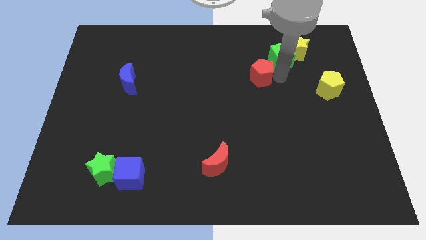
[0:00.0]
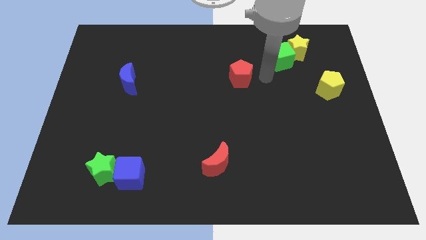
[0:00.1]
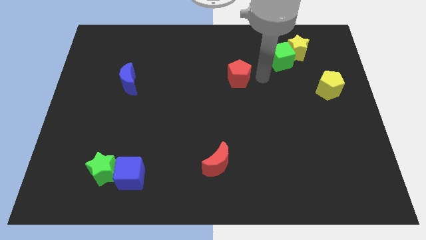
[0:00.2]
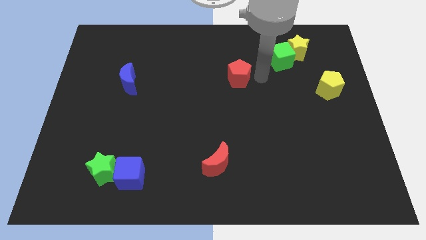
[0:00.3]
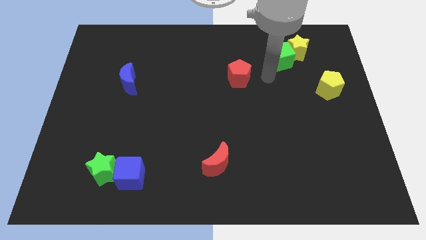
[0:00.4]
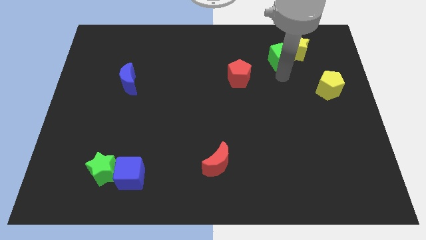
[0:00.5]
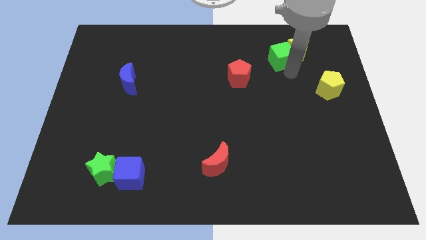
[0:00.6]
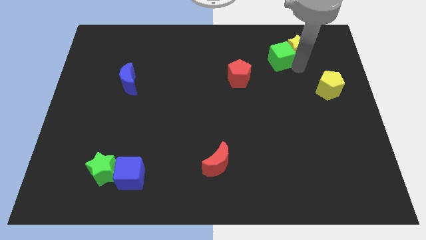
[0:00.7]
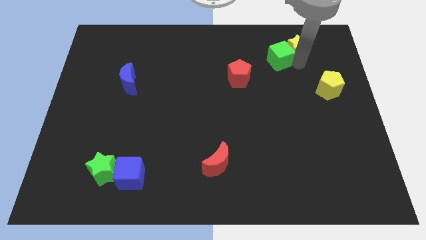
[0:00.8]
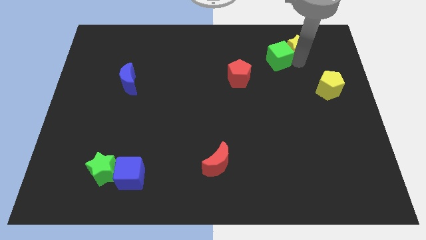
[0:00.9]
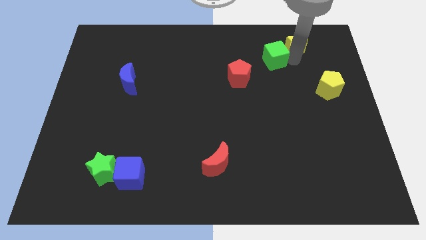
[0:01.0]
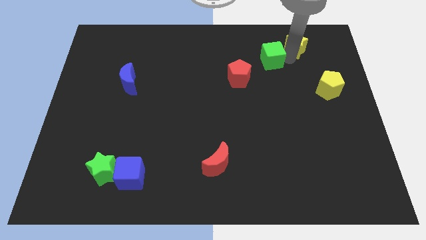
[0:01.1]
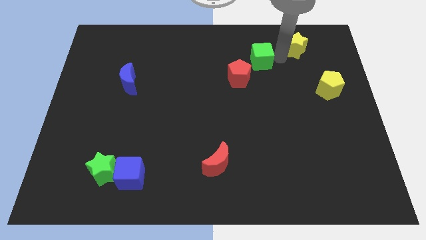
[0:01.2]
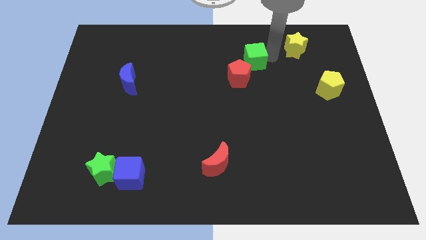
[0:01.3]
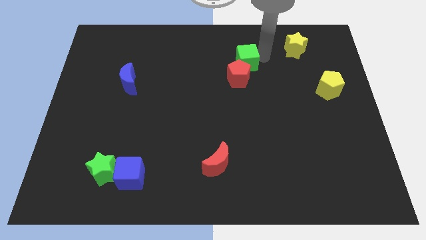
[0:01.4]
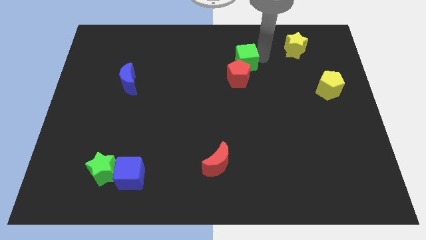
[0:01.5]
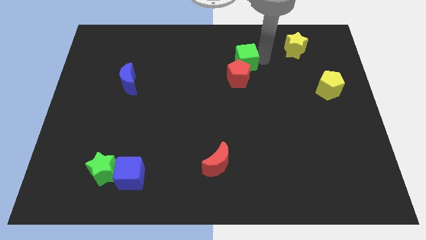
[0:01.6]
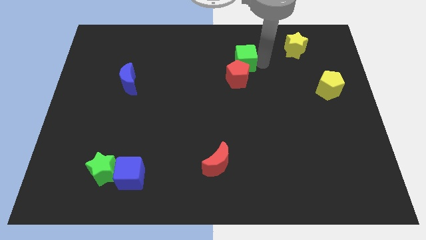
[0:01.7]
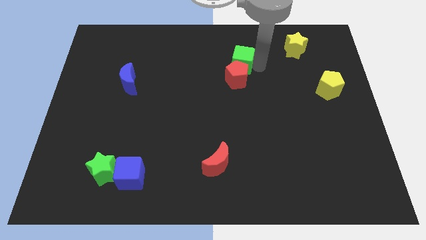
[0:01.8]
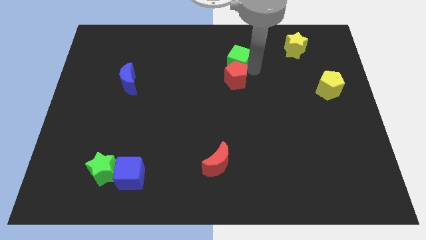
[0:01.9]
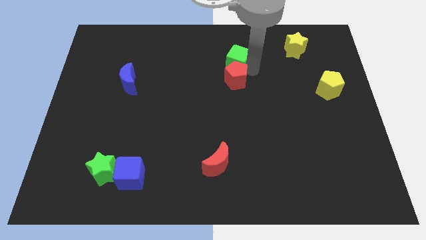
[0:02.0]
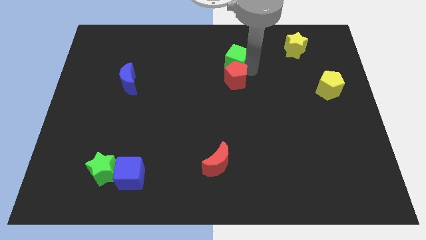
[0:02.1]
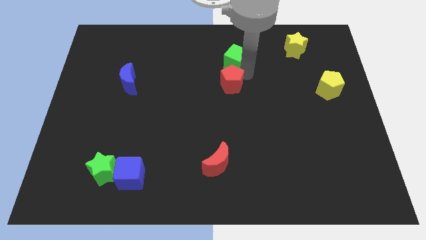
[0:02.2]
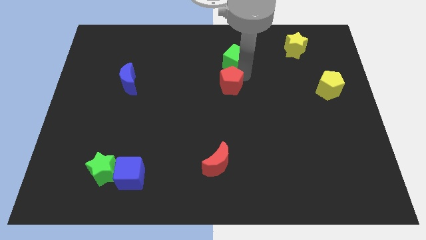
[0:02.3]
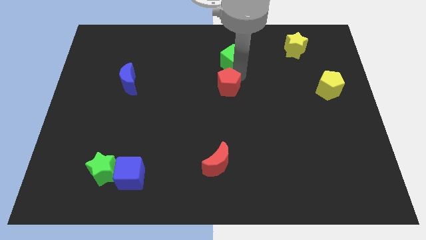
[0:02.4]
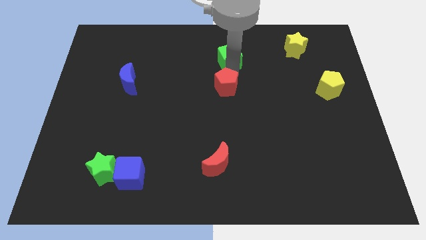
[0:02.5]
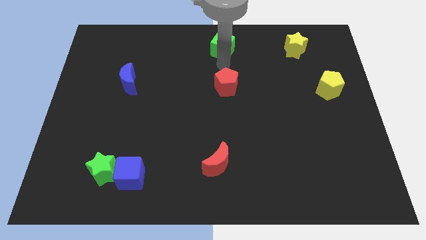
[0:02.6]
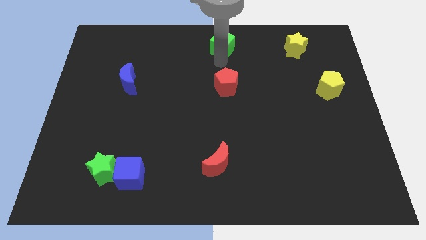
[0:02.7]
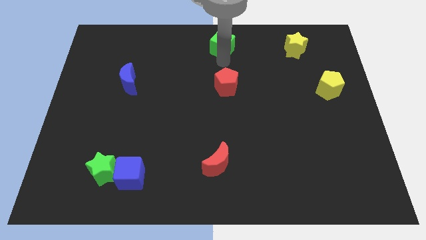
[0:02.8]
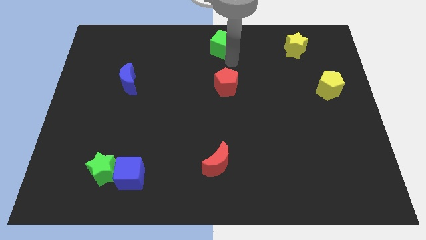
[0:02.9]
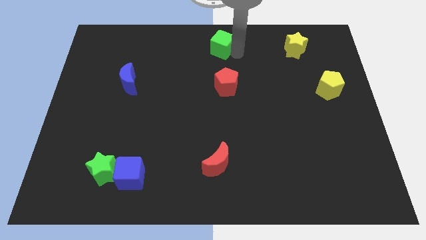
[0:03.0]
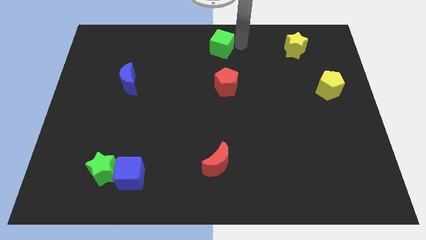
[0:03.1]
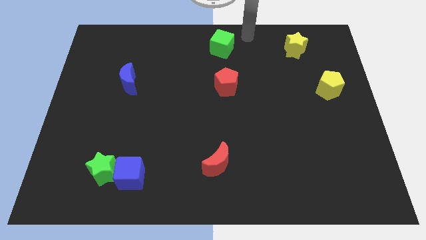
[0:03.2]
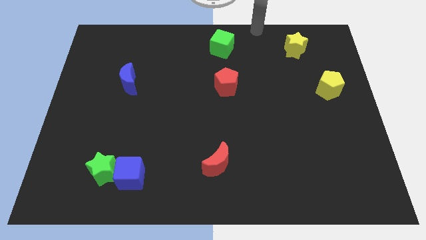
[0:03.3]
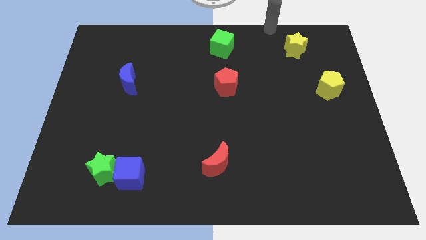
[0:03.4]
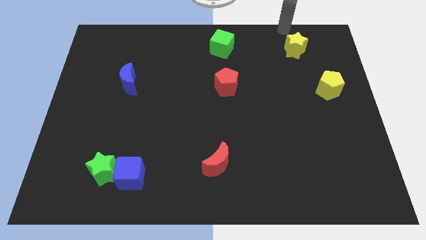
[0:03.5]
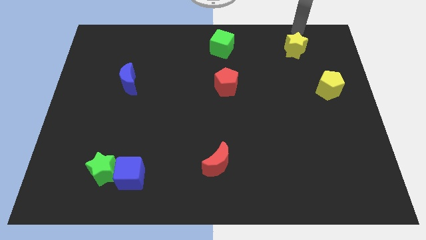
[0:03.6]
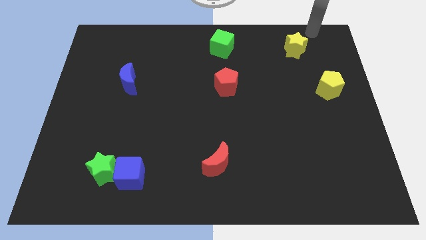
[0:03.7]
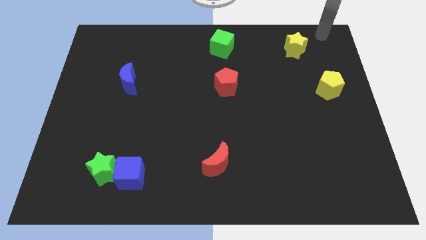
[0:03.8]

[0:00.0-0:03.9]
place red pentagon and green cube in a vertical line

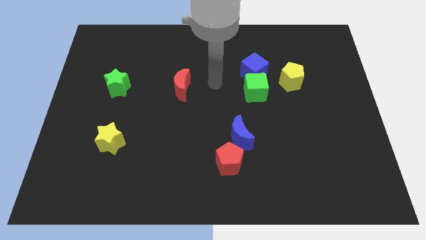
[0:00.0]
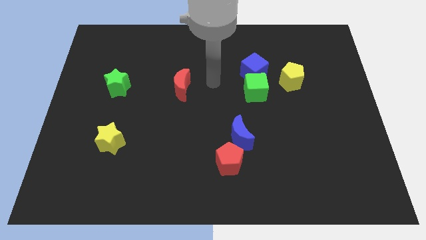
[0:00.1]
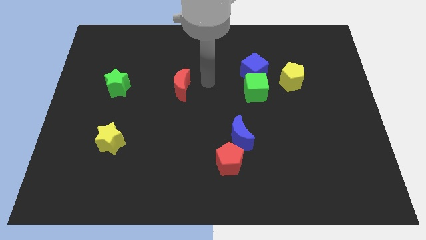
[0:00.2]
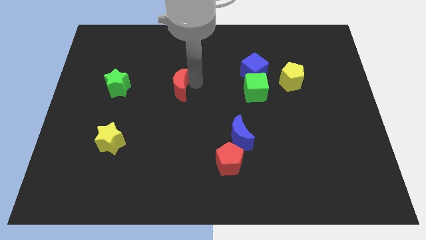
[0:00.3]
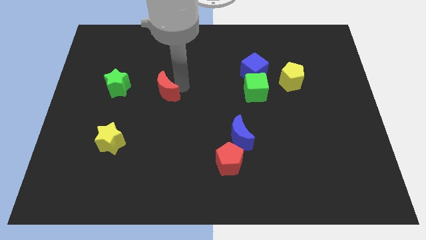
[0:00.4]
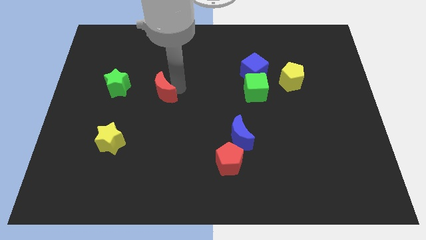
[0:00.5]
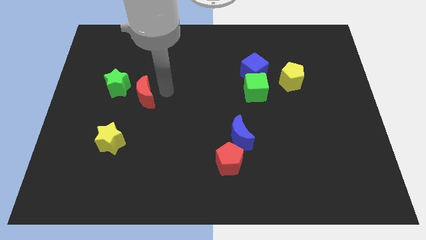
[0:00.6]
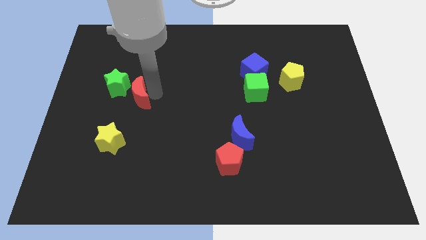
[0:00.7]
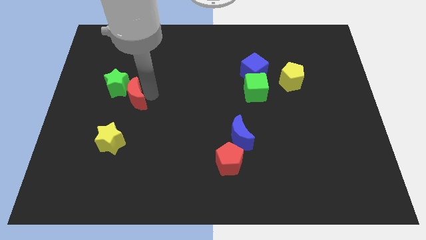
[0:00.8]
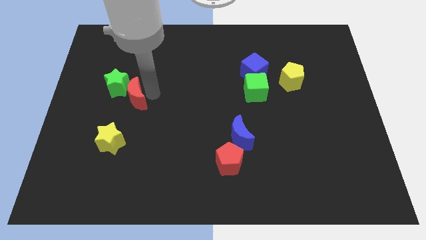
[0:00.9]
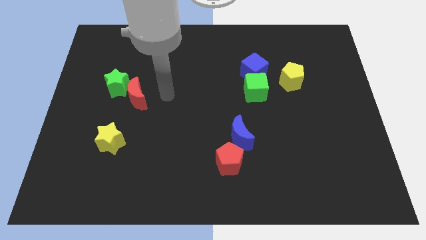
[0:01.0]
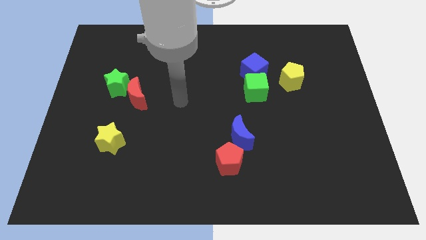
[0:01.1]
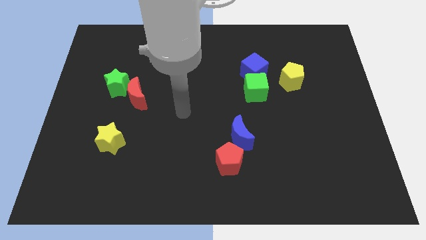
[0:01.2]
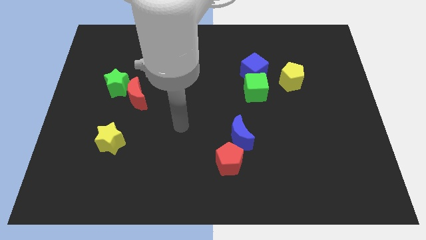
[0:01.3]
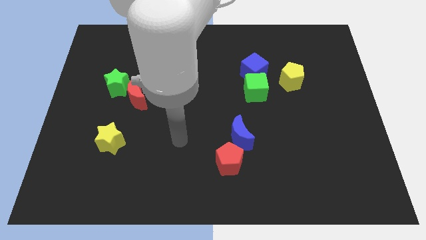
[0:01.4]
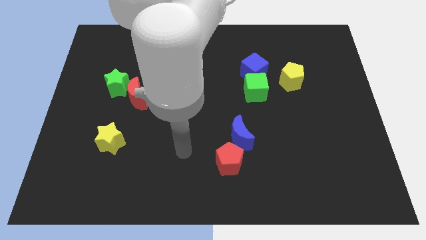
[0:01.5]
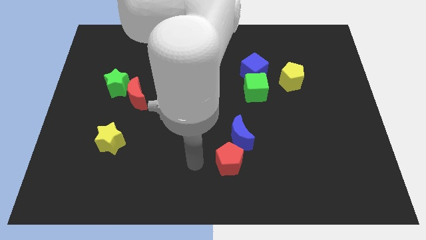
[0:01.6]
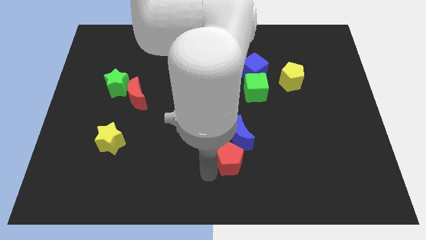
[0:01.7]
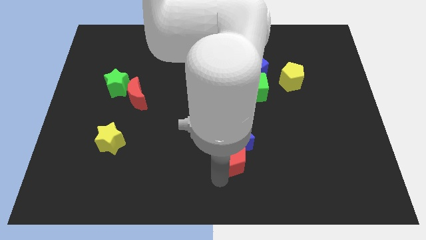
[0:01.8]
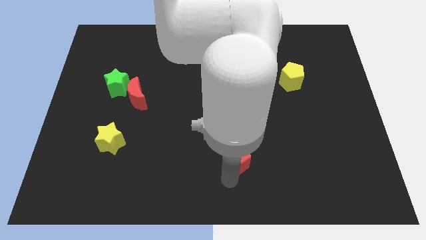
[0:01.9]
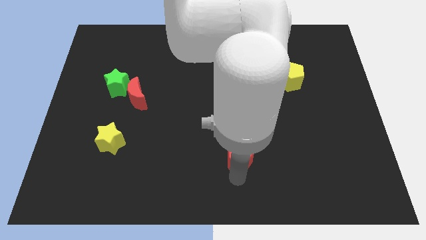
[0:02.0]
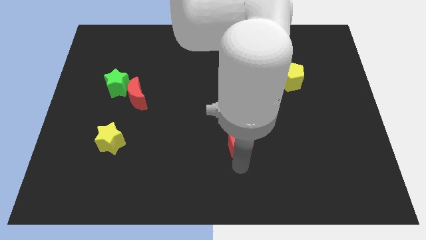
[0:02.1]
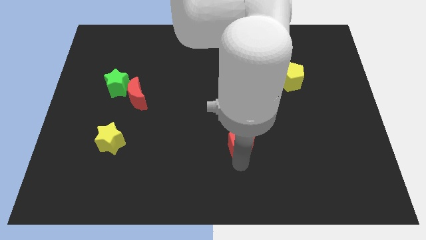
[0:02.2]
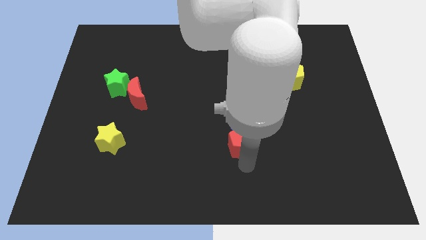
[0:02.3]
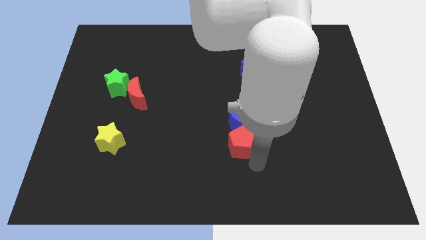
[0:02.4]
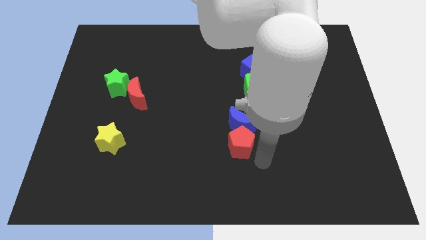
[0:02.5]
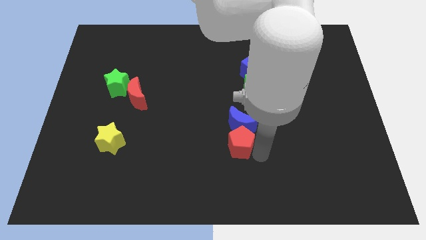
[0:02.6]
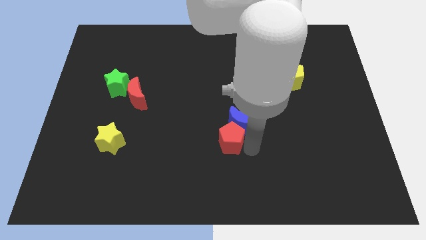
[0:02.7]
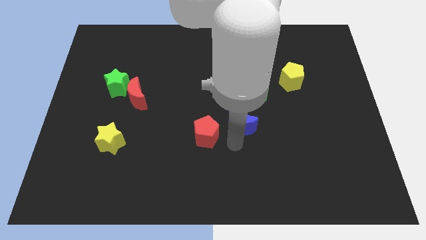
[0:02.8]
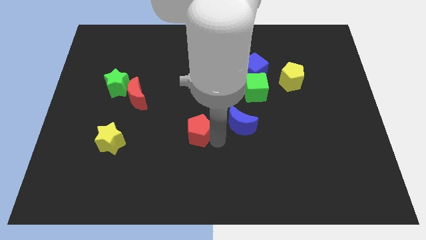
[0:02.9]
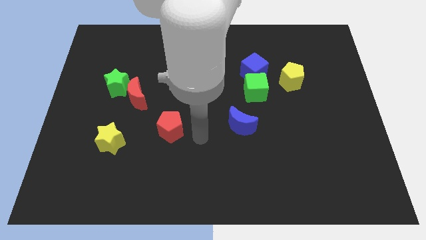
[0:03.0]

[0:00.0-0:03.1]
push the red pentagon parallel left to the blue crescent

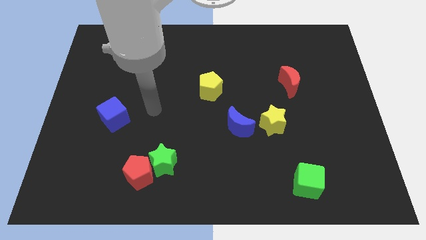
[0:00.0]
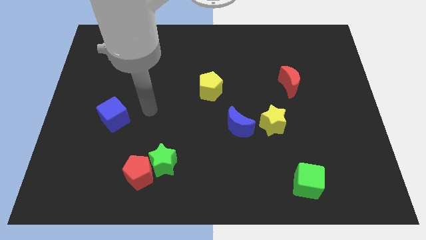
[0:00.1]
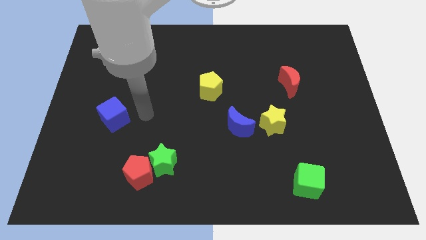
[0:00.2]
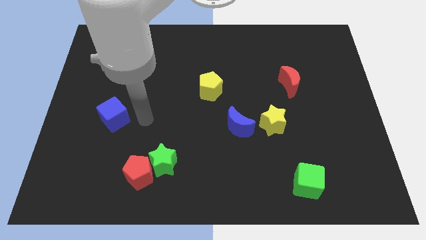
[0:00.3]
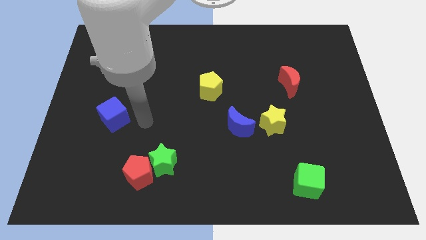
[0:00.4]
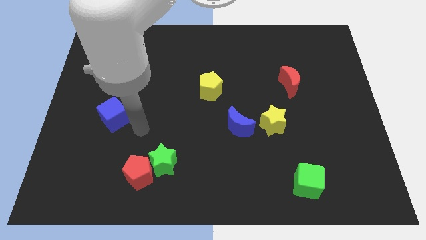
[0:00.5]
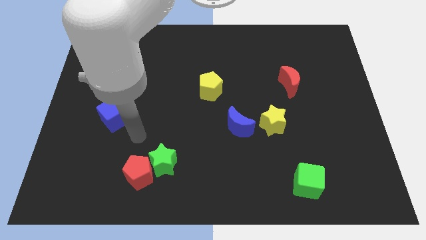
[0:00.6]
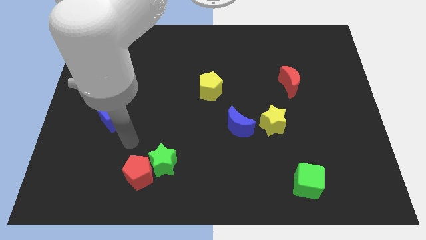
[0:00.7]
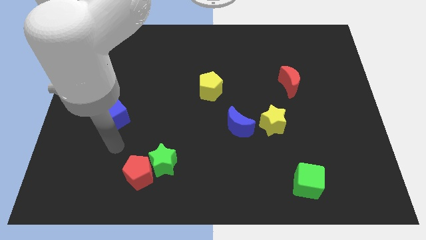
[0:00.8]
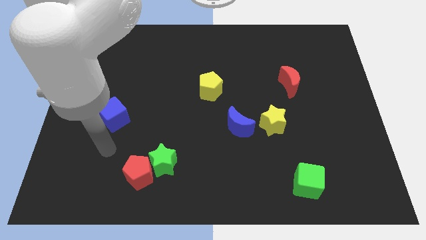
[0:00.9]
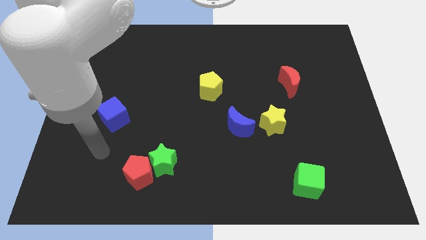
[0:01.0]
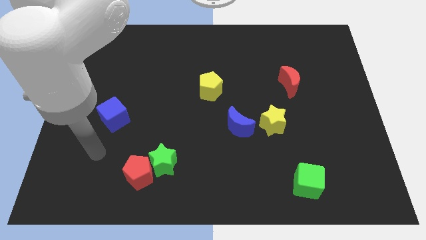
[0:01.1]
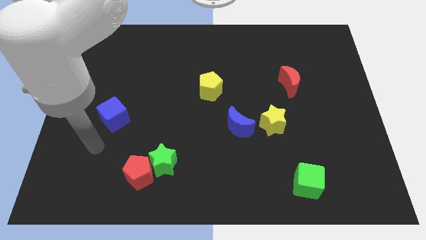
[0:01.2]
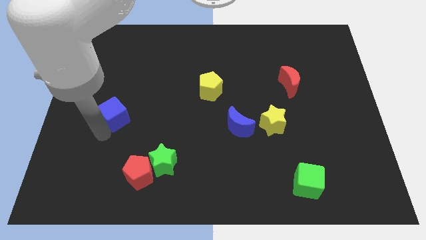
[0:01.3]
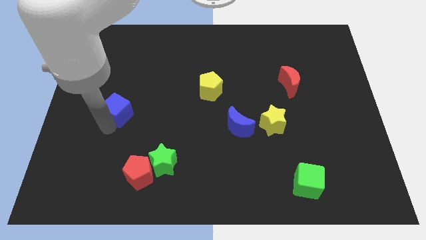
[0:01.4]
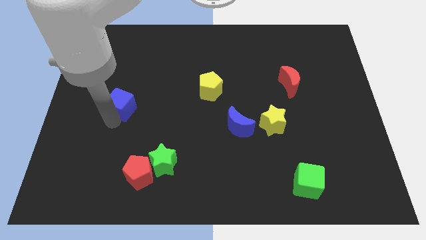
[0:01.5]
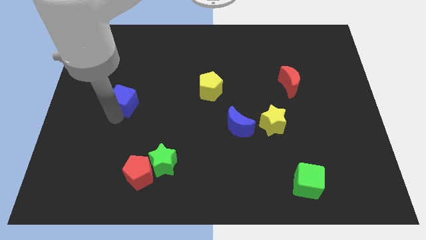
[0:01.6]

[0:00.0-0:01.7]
place the arm below the blue cube

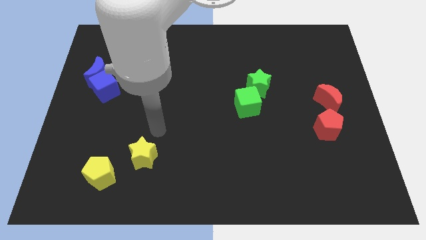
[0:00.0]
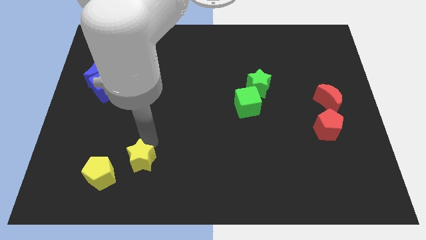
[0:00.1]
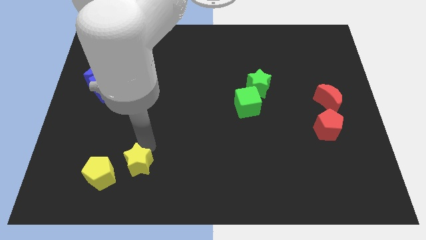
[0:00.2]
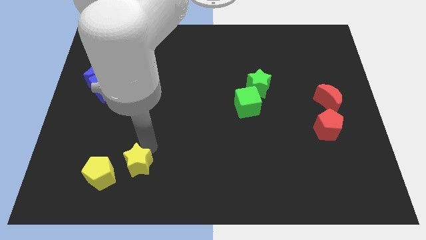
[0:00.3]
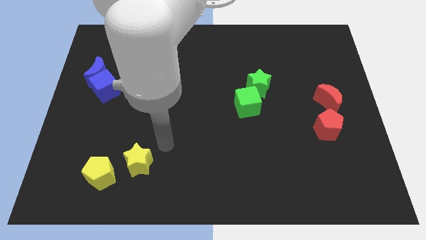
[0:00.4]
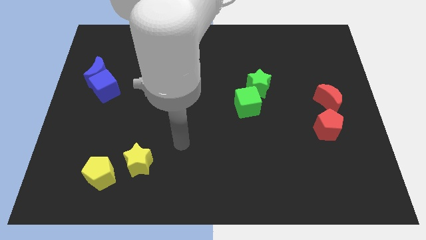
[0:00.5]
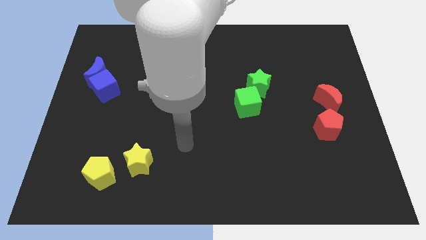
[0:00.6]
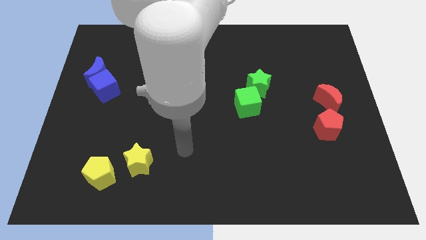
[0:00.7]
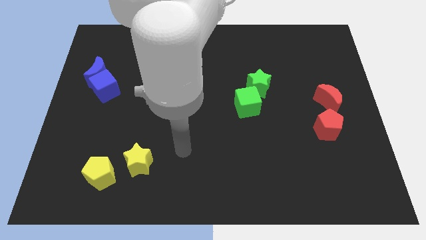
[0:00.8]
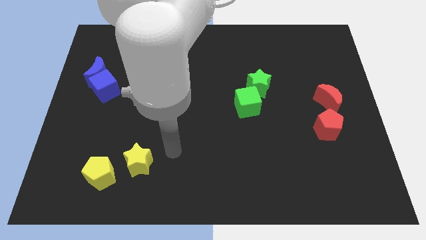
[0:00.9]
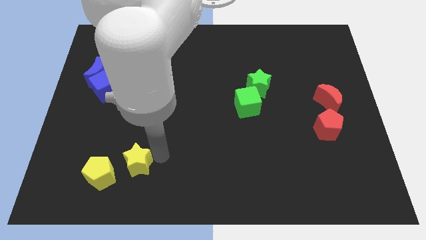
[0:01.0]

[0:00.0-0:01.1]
push the yellow star slightly towards the right side of the yellow pentagon
